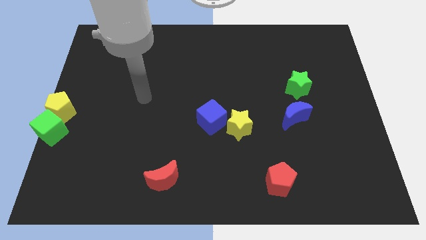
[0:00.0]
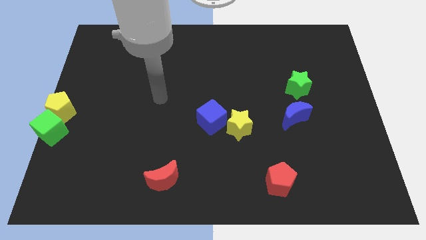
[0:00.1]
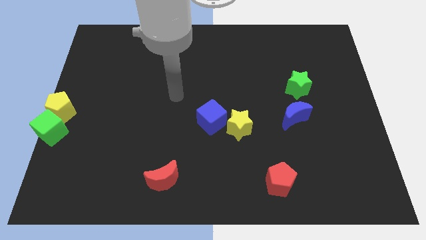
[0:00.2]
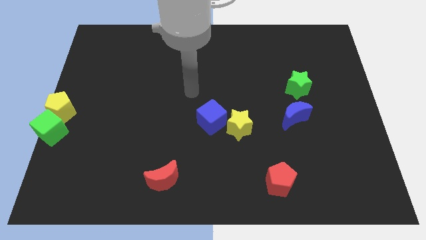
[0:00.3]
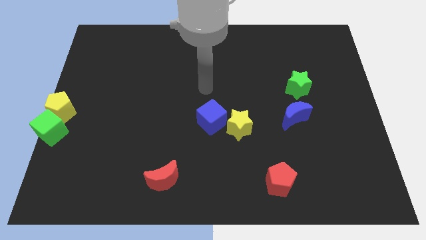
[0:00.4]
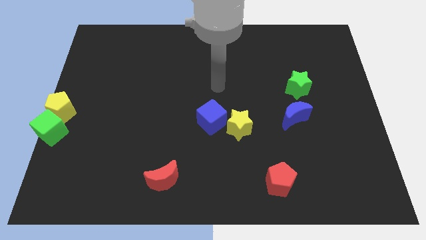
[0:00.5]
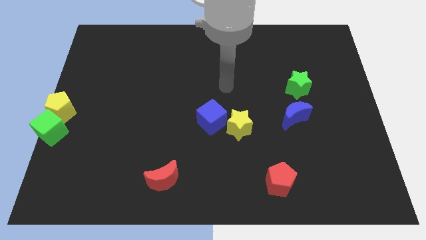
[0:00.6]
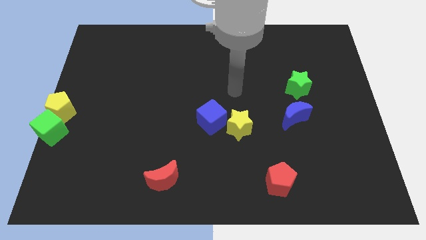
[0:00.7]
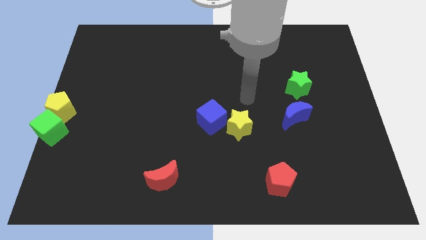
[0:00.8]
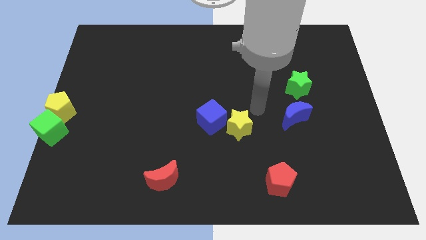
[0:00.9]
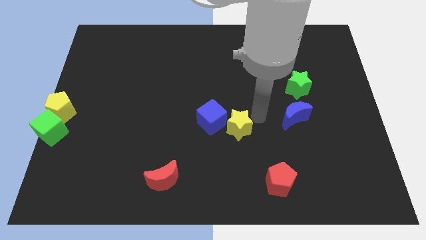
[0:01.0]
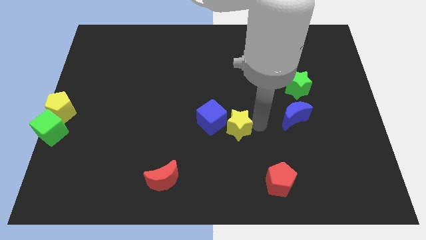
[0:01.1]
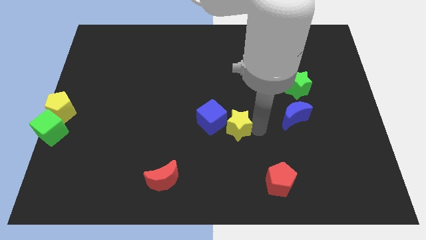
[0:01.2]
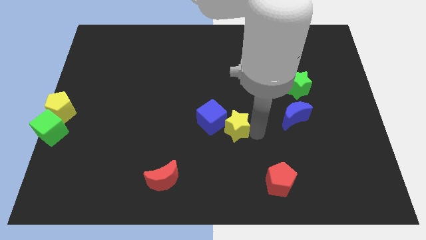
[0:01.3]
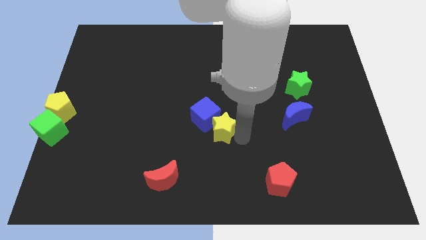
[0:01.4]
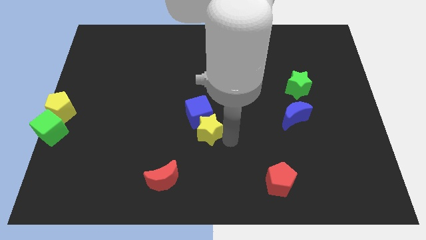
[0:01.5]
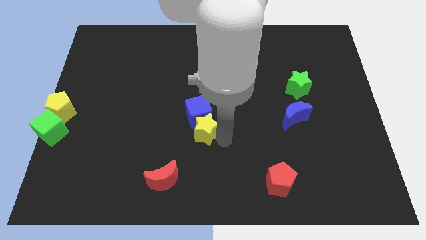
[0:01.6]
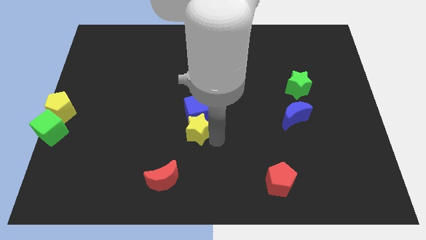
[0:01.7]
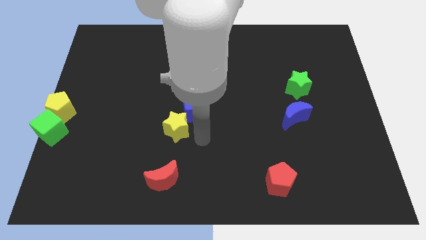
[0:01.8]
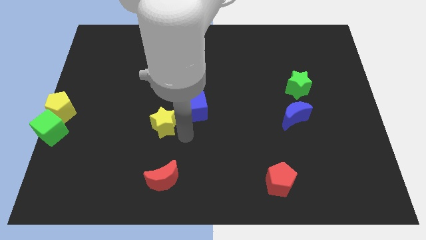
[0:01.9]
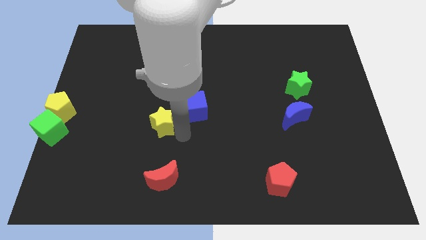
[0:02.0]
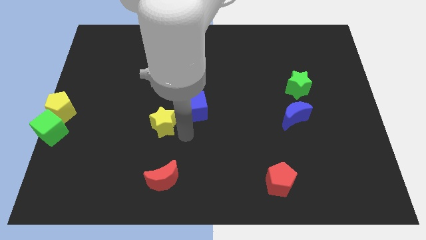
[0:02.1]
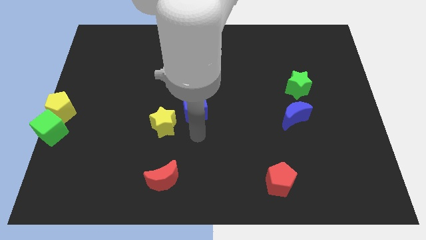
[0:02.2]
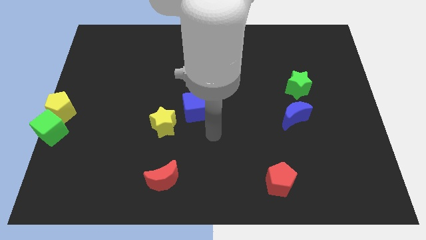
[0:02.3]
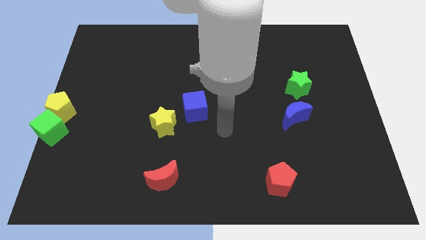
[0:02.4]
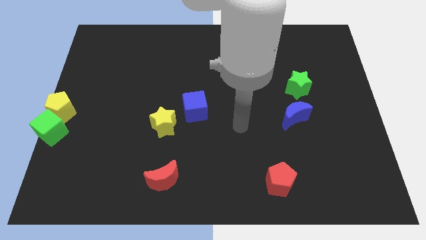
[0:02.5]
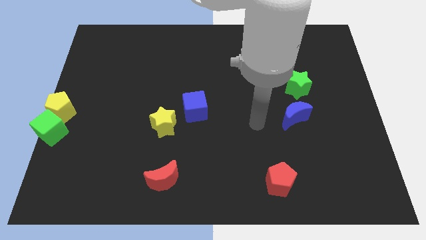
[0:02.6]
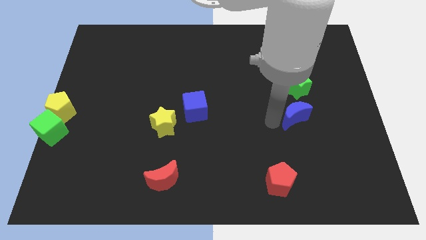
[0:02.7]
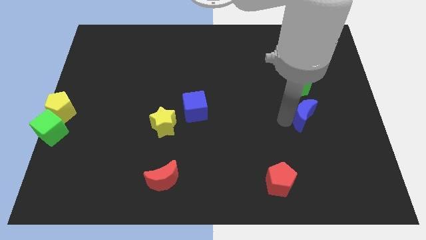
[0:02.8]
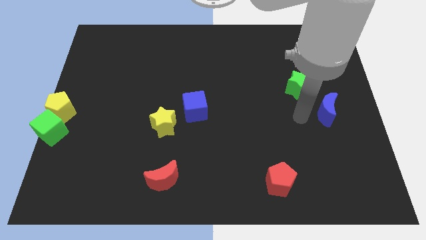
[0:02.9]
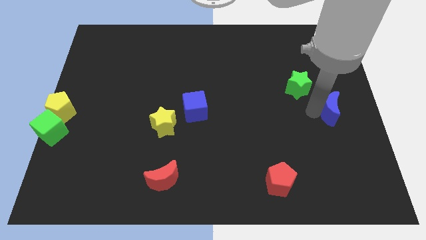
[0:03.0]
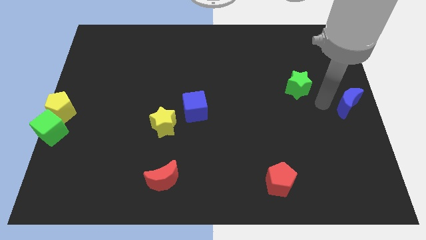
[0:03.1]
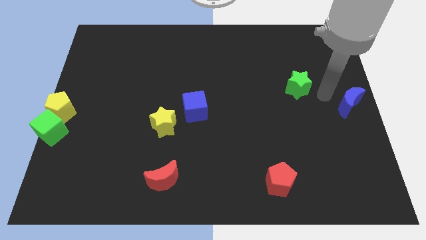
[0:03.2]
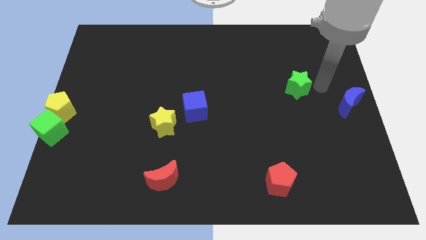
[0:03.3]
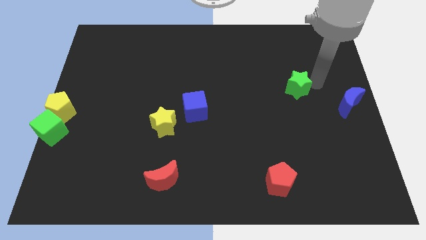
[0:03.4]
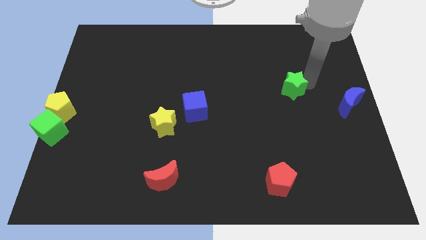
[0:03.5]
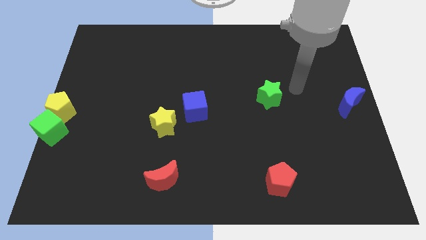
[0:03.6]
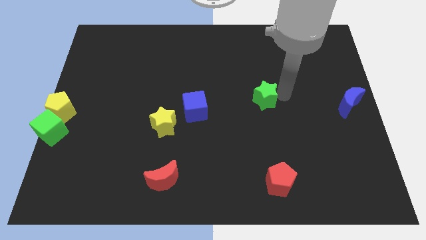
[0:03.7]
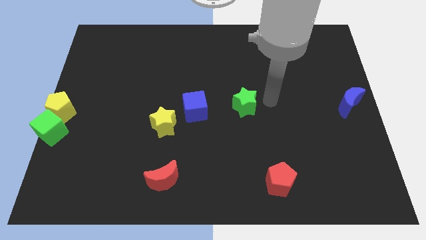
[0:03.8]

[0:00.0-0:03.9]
move the blue crescent to the center right side of the board

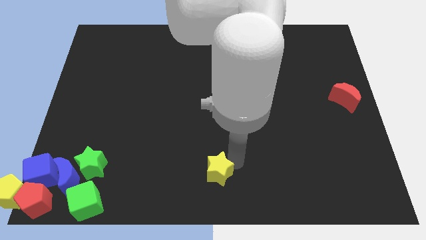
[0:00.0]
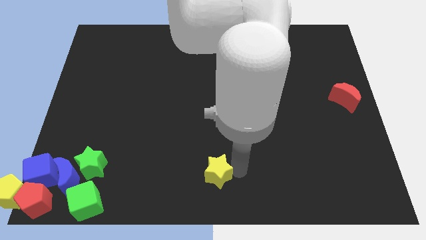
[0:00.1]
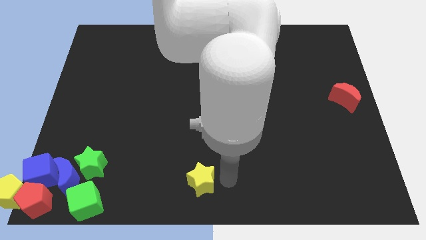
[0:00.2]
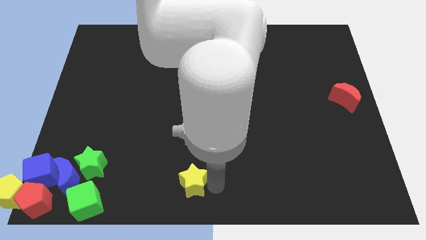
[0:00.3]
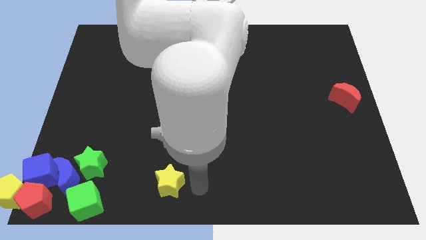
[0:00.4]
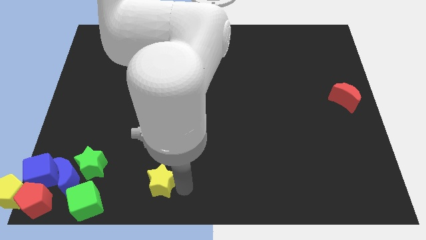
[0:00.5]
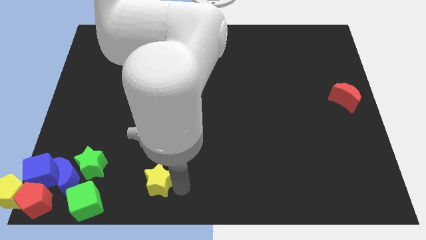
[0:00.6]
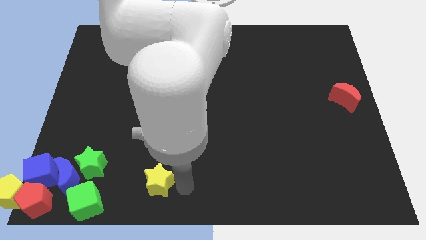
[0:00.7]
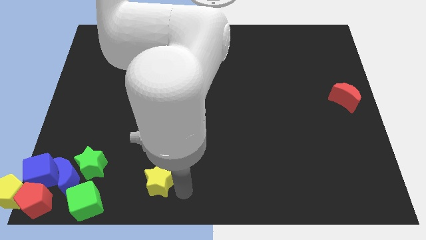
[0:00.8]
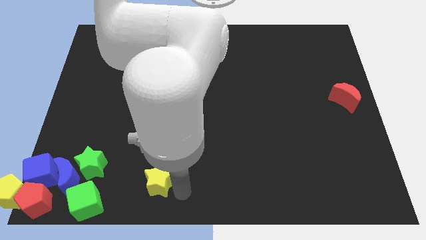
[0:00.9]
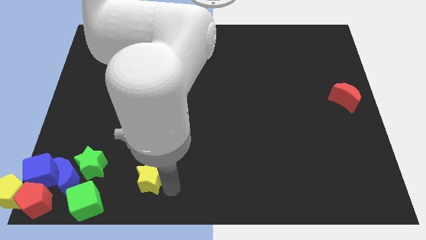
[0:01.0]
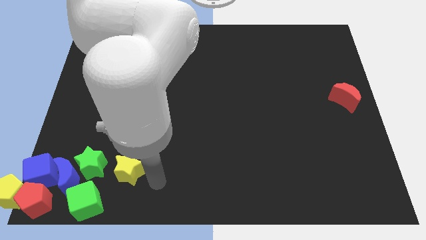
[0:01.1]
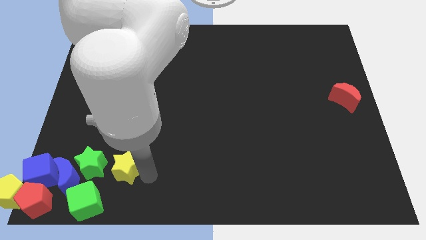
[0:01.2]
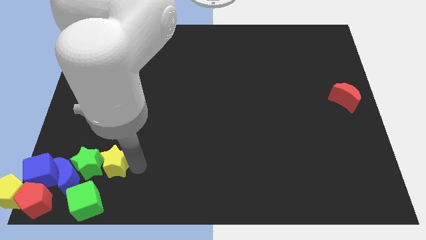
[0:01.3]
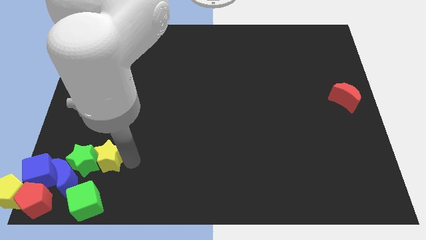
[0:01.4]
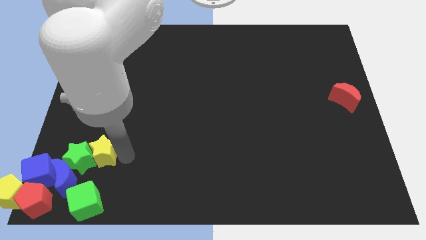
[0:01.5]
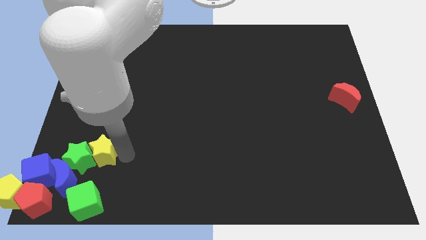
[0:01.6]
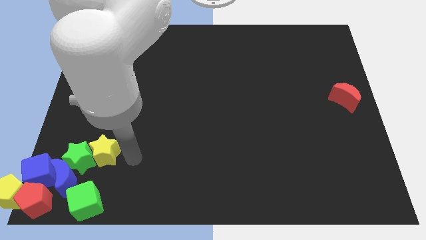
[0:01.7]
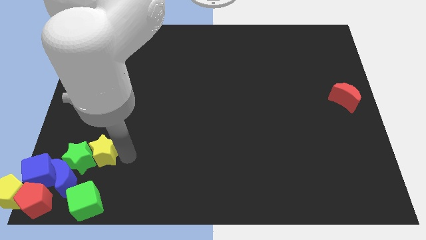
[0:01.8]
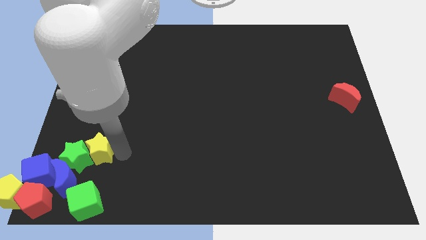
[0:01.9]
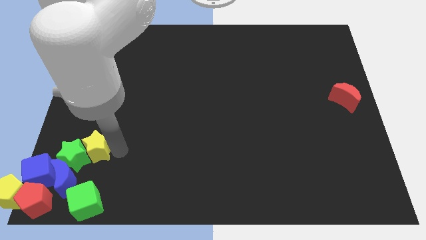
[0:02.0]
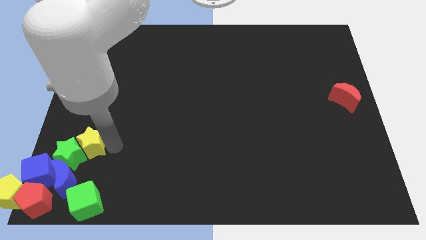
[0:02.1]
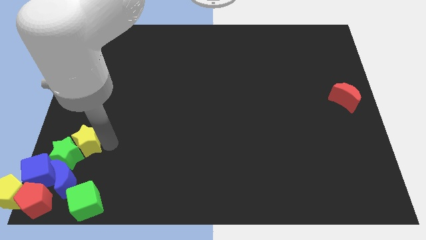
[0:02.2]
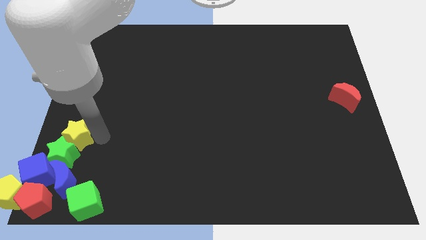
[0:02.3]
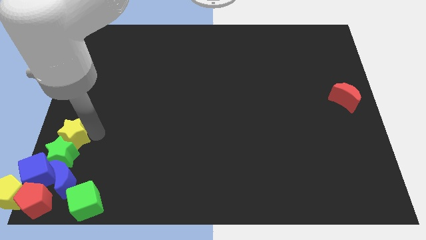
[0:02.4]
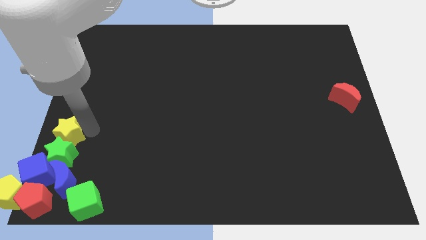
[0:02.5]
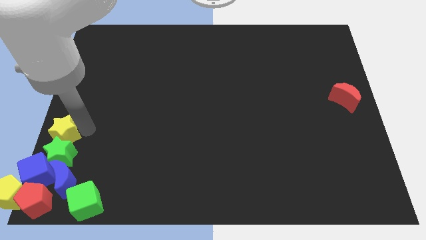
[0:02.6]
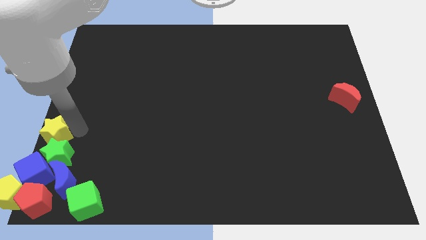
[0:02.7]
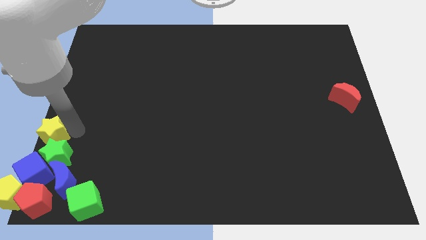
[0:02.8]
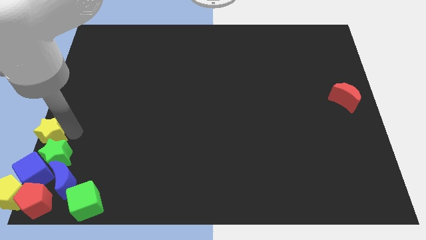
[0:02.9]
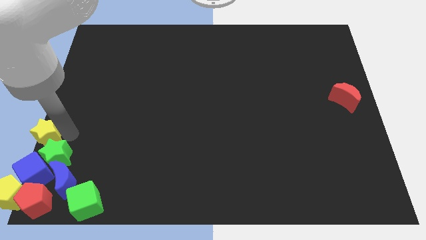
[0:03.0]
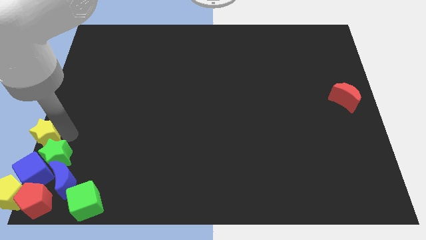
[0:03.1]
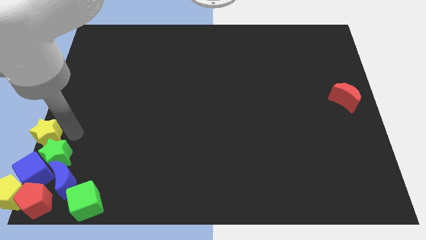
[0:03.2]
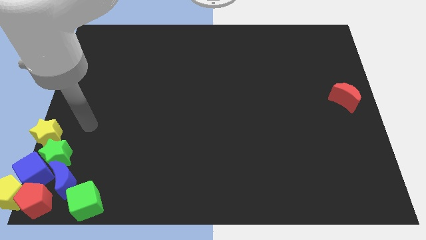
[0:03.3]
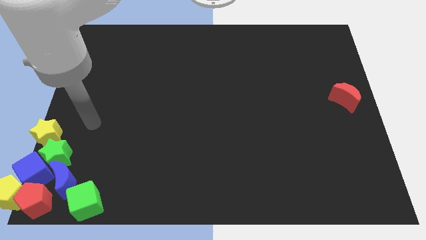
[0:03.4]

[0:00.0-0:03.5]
place yellow star on top left of green star

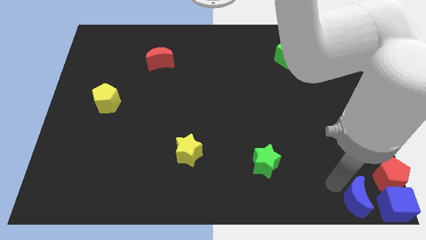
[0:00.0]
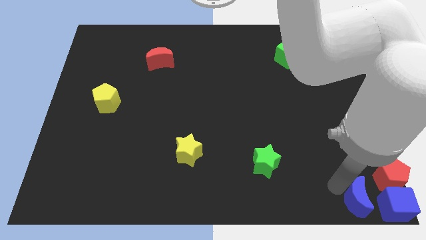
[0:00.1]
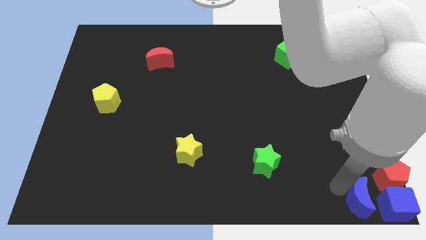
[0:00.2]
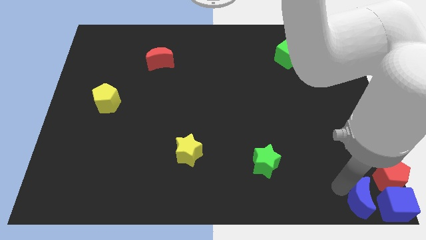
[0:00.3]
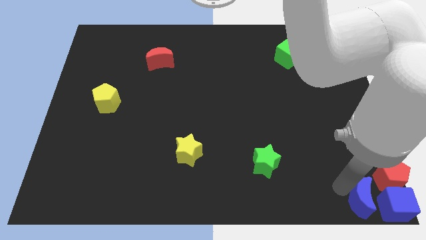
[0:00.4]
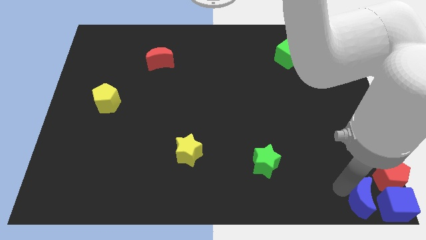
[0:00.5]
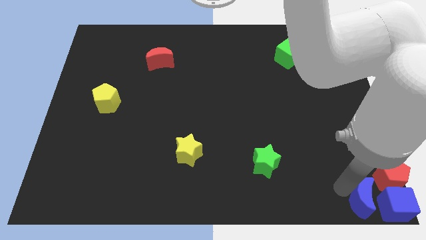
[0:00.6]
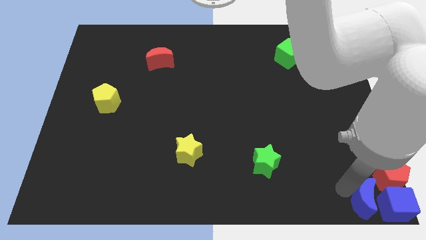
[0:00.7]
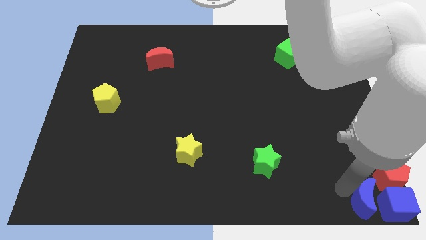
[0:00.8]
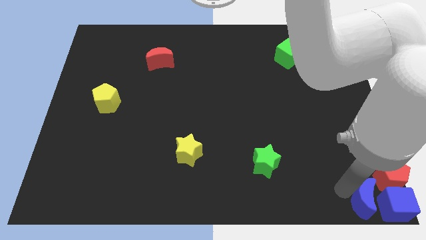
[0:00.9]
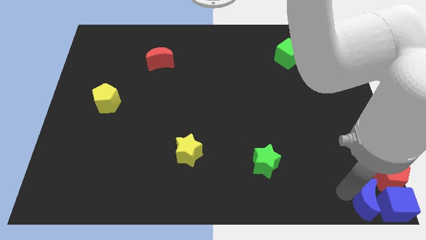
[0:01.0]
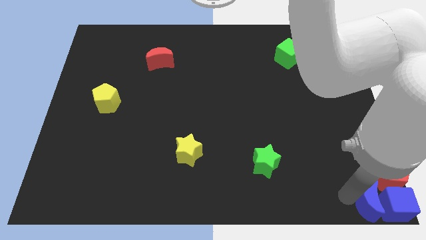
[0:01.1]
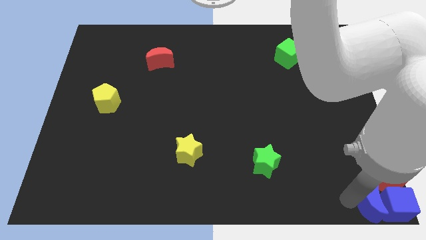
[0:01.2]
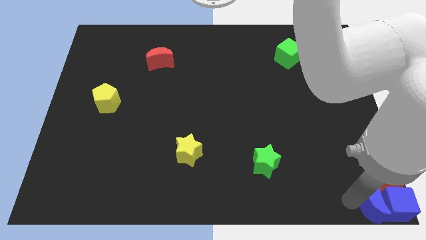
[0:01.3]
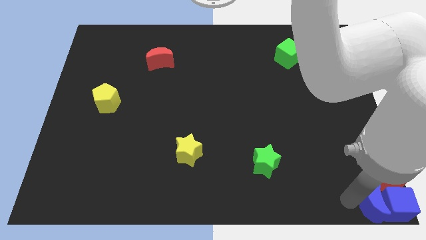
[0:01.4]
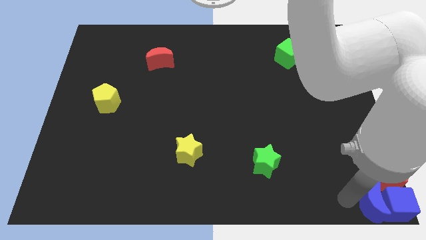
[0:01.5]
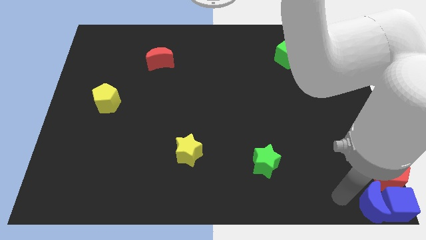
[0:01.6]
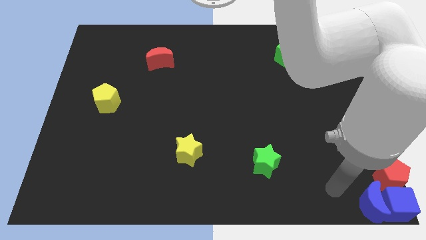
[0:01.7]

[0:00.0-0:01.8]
push the blue crescent towards blue cube
